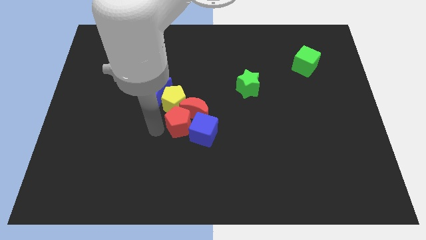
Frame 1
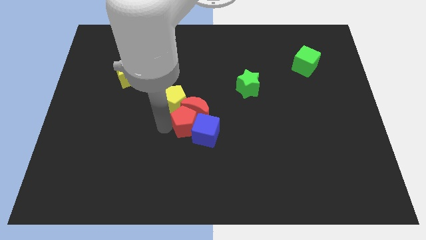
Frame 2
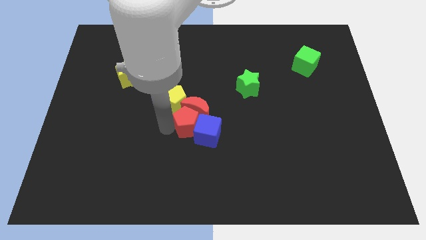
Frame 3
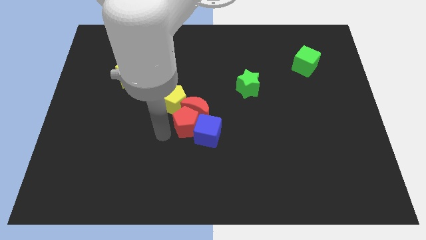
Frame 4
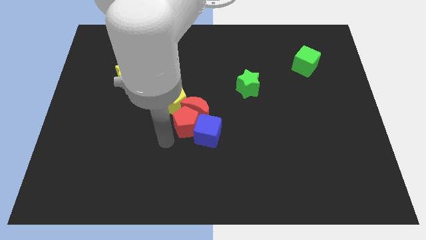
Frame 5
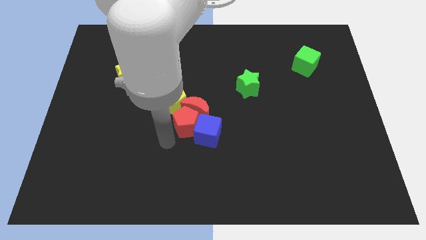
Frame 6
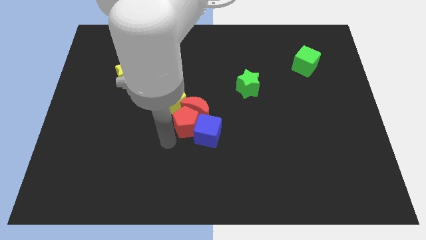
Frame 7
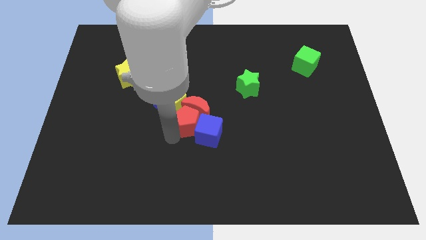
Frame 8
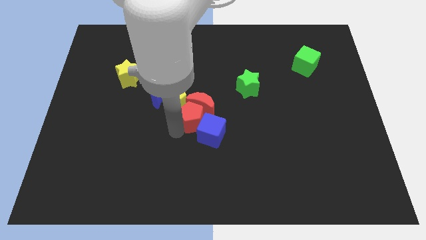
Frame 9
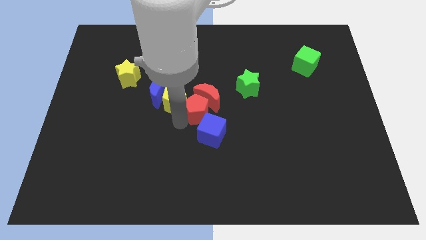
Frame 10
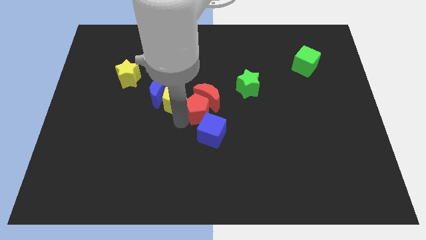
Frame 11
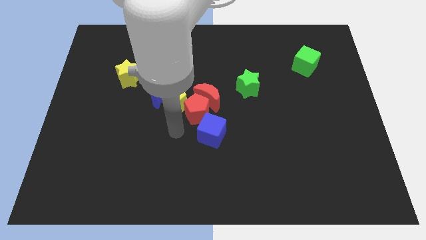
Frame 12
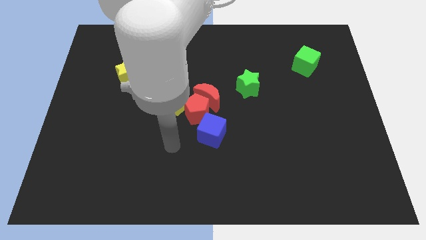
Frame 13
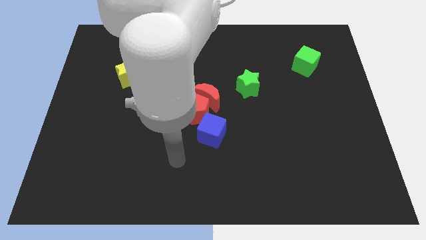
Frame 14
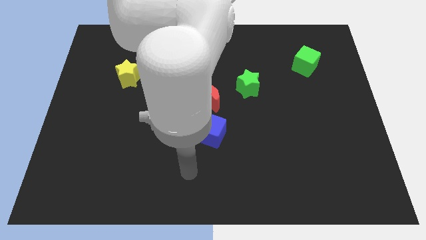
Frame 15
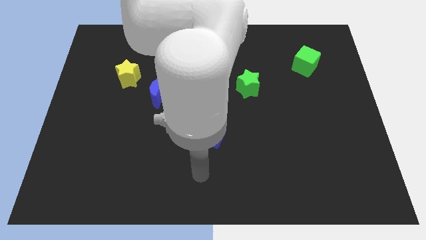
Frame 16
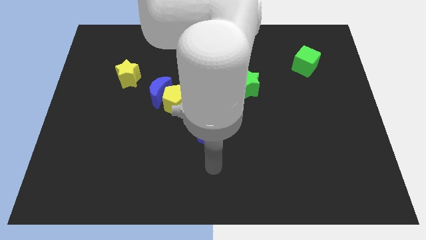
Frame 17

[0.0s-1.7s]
push red pentagon to the right of the yellow pentagon

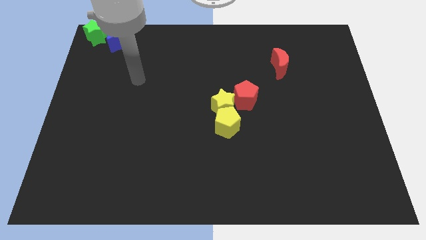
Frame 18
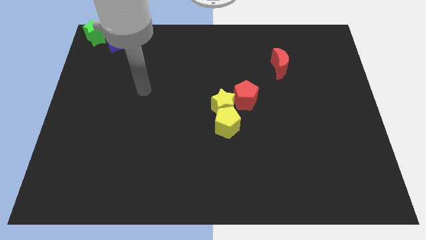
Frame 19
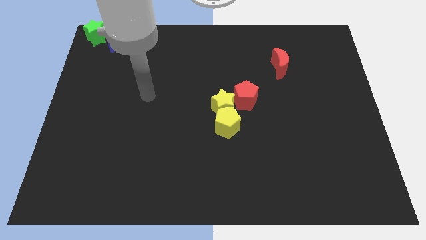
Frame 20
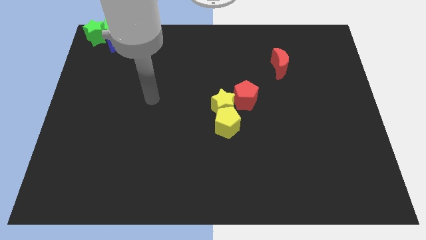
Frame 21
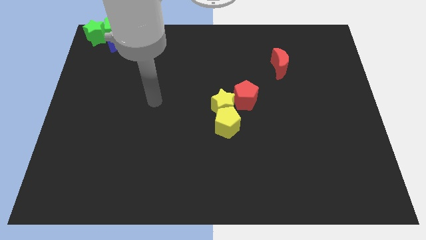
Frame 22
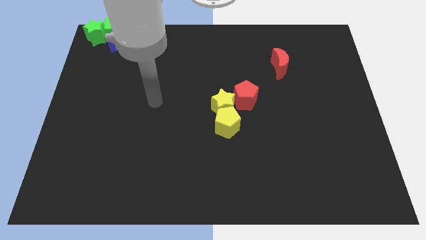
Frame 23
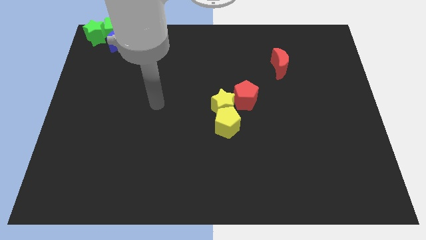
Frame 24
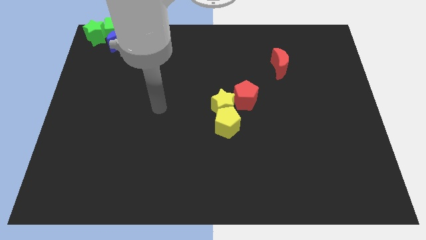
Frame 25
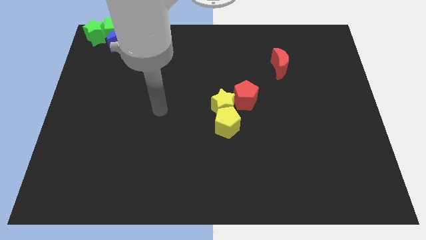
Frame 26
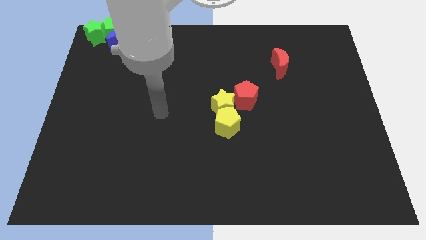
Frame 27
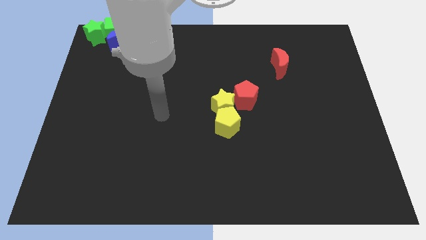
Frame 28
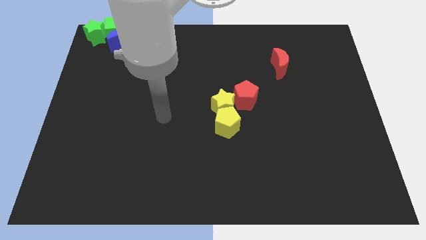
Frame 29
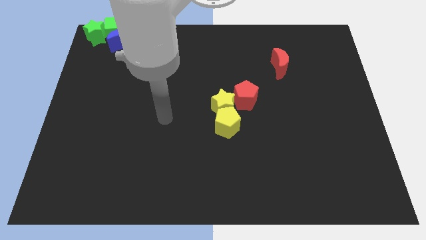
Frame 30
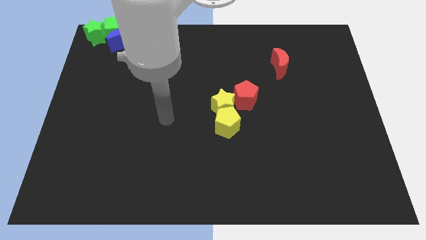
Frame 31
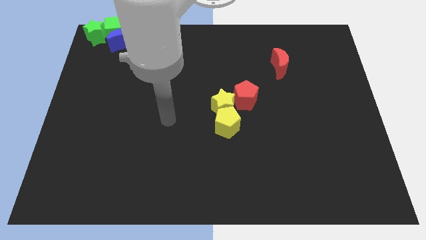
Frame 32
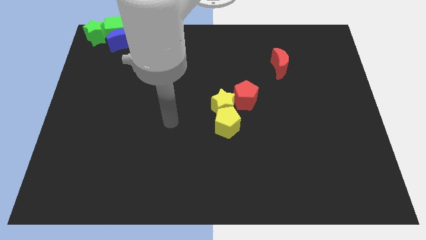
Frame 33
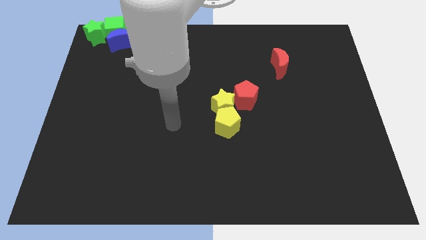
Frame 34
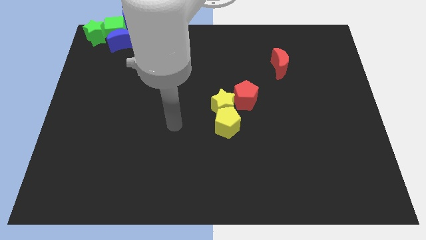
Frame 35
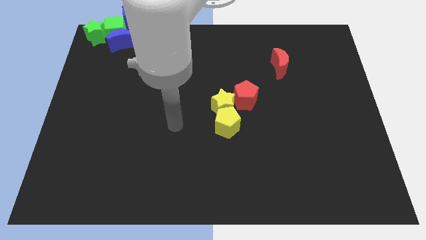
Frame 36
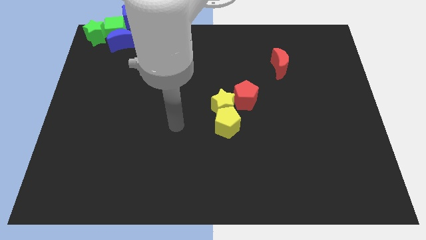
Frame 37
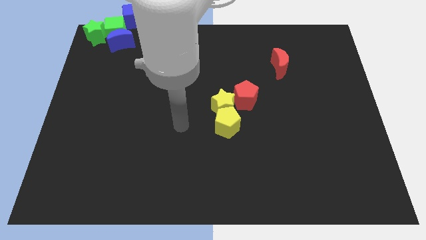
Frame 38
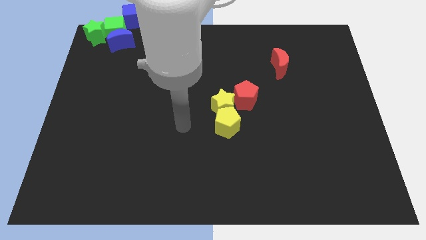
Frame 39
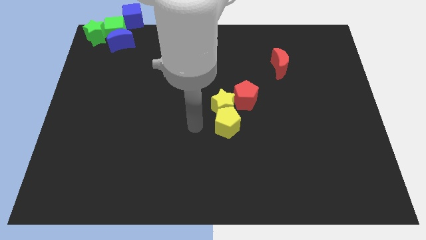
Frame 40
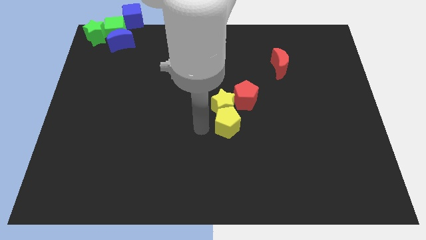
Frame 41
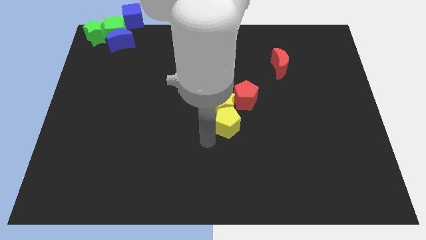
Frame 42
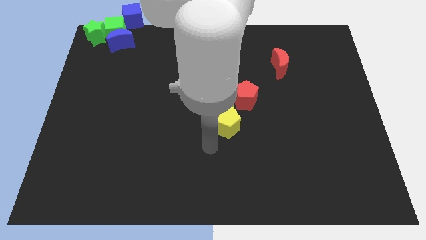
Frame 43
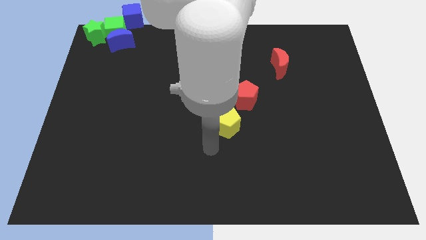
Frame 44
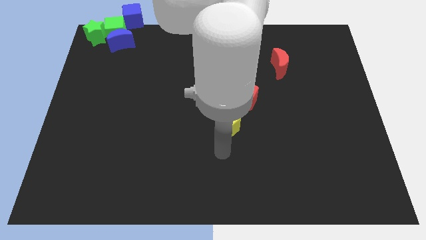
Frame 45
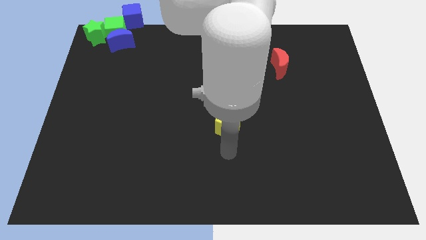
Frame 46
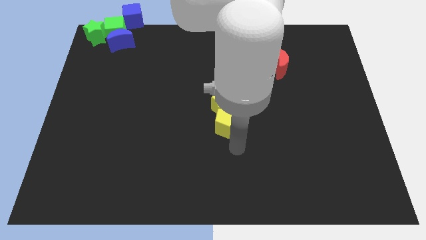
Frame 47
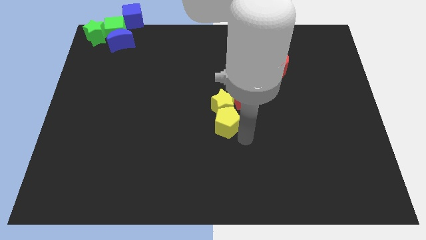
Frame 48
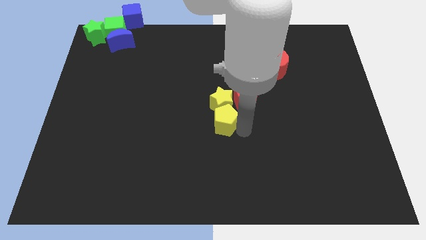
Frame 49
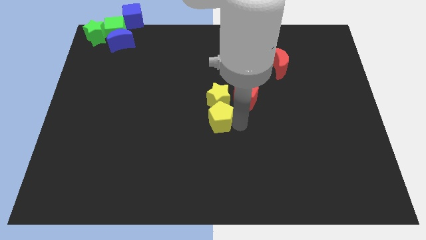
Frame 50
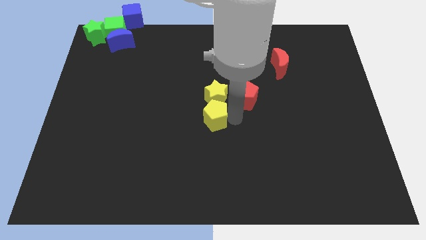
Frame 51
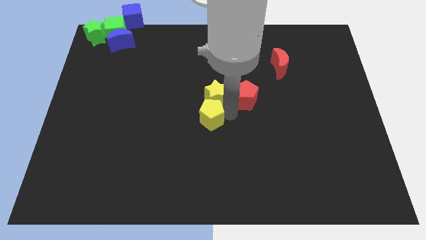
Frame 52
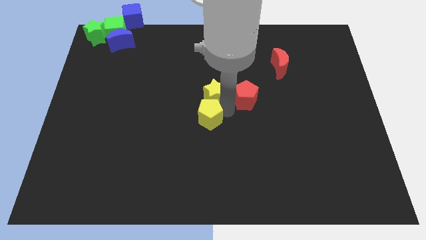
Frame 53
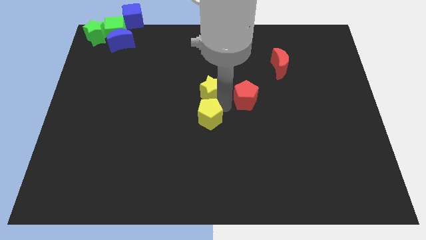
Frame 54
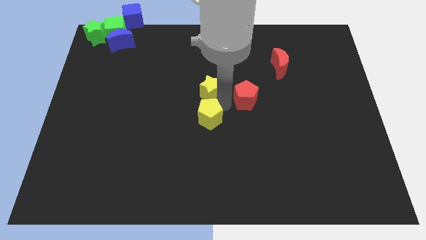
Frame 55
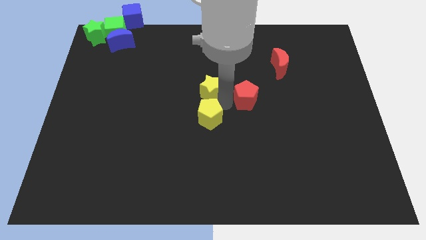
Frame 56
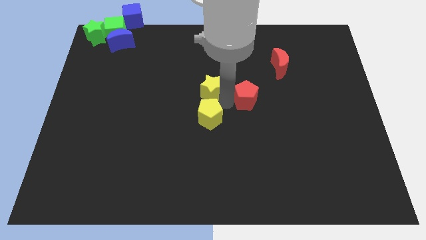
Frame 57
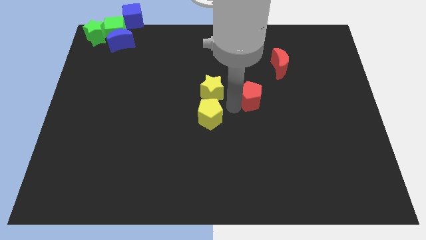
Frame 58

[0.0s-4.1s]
put the yellow star to the top side of the yellow pentagon

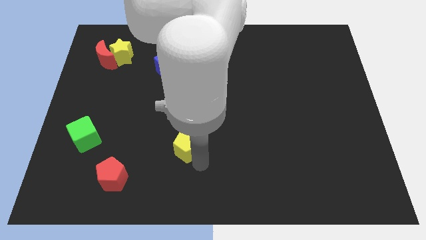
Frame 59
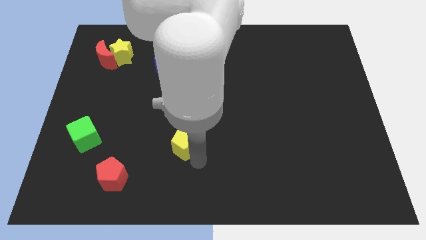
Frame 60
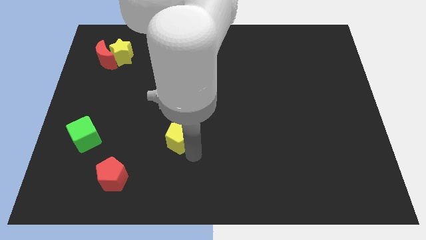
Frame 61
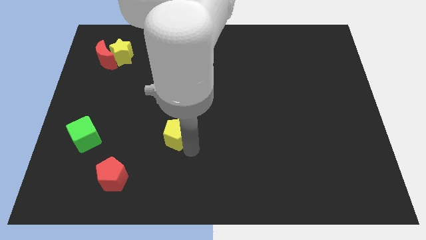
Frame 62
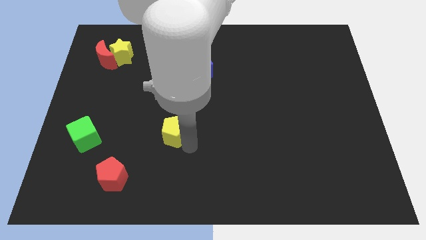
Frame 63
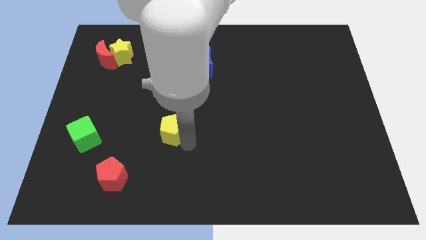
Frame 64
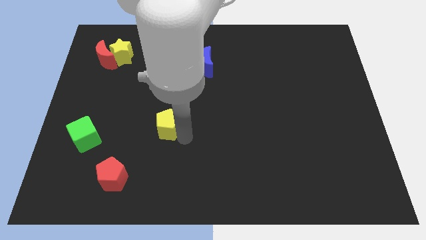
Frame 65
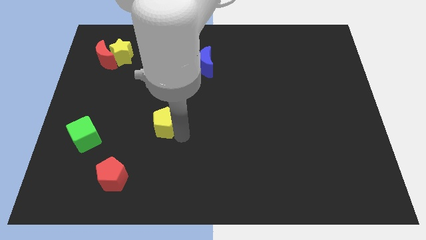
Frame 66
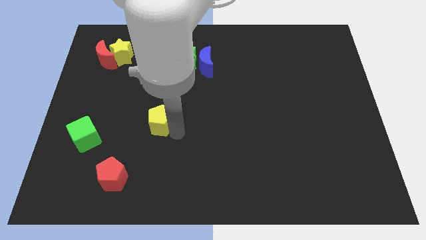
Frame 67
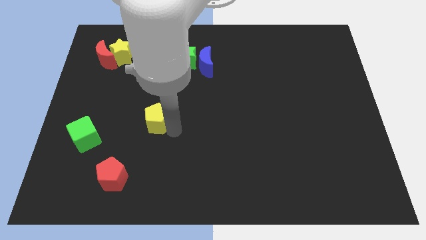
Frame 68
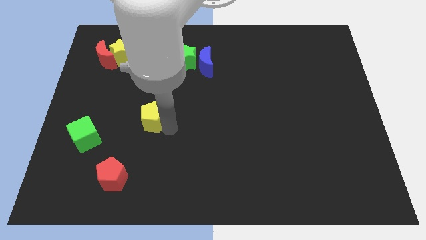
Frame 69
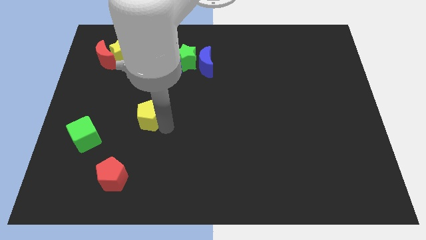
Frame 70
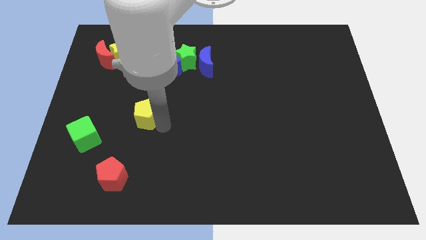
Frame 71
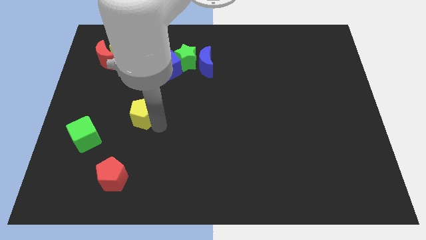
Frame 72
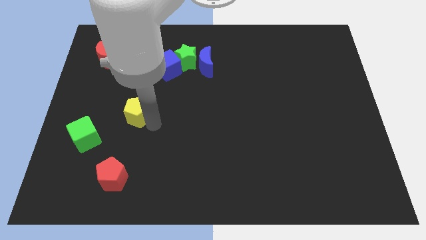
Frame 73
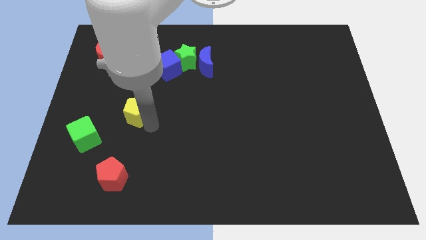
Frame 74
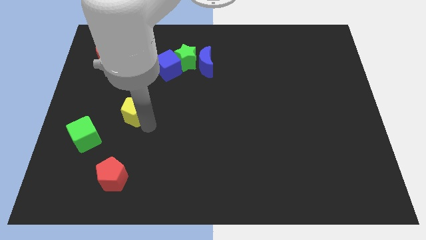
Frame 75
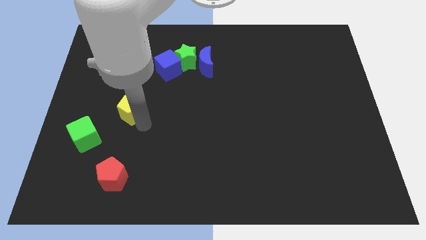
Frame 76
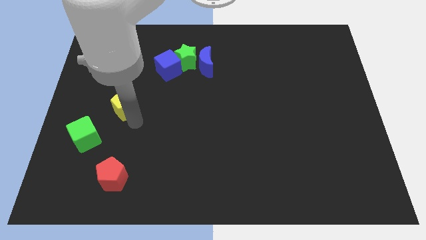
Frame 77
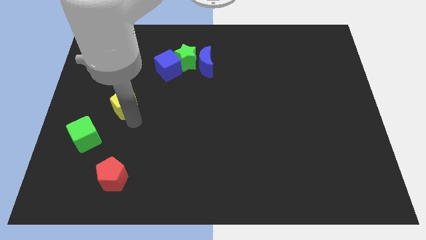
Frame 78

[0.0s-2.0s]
push the yellow pentagon vertically above the red pentagon

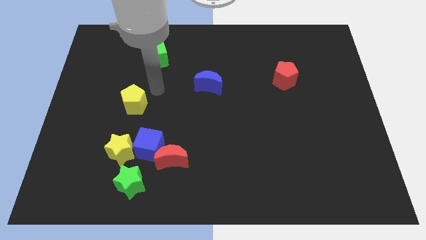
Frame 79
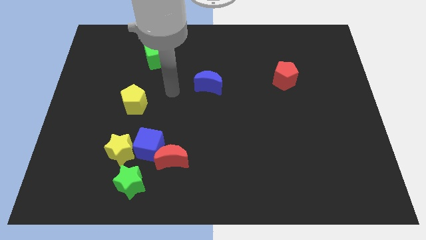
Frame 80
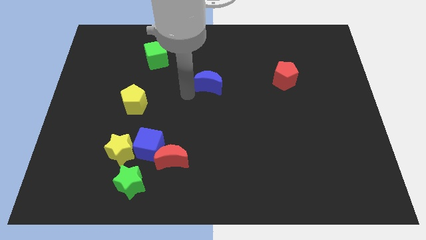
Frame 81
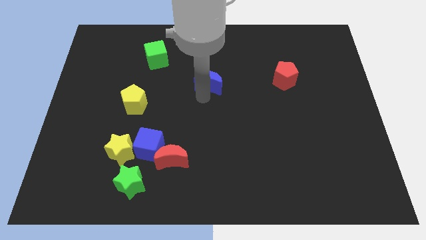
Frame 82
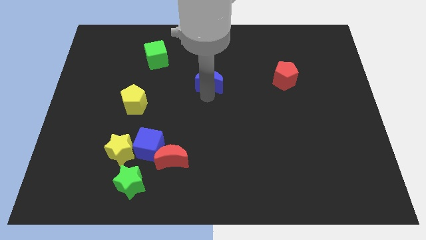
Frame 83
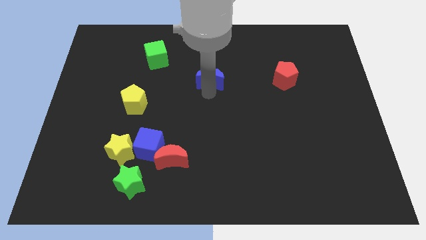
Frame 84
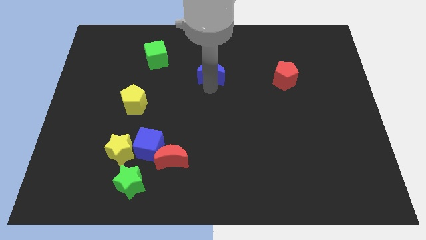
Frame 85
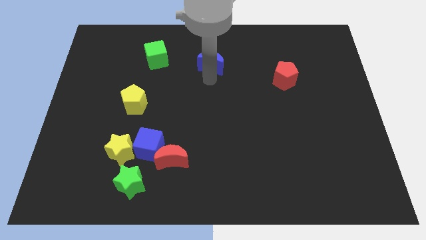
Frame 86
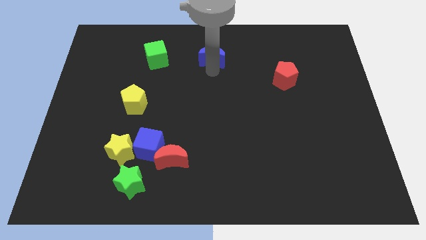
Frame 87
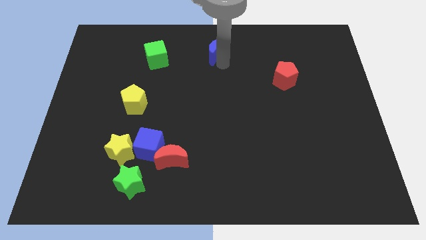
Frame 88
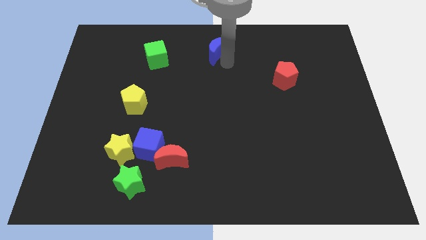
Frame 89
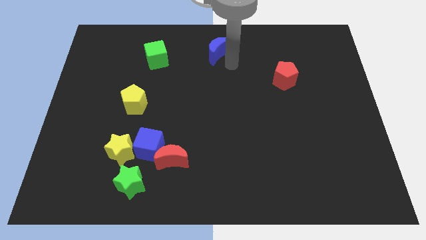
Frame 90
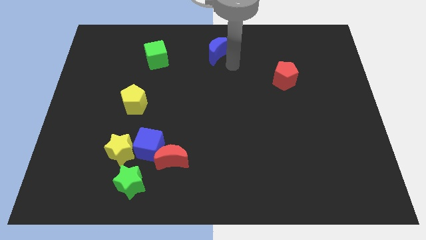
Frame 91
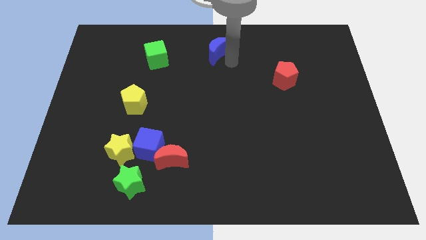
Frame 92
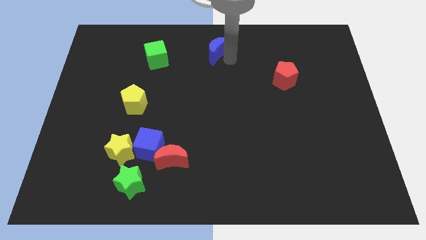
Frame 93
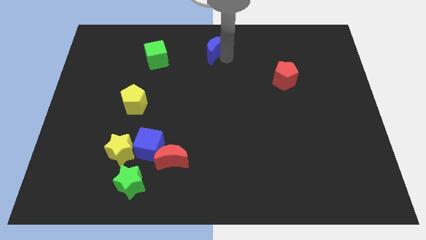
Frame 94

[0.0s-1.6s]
drag the blue moon towards the top center
